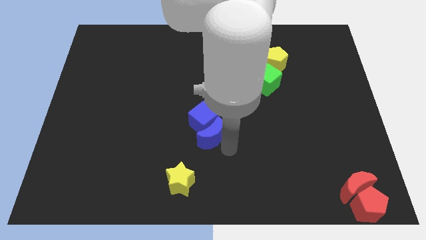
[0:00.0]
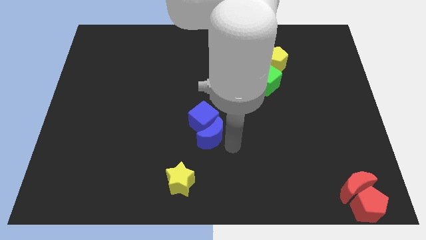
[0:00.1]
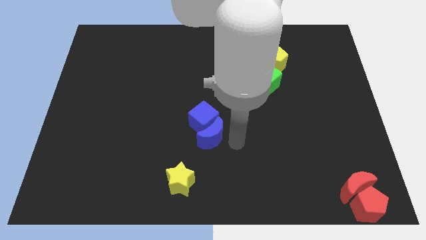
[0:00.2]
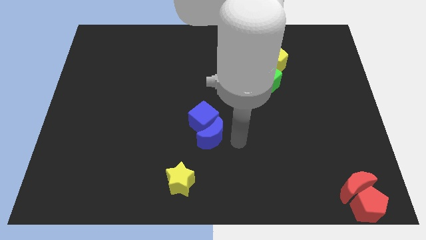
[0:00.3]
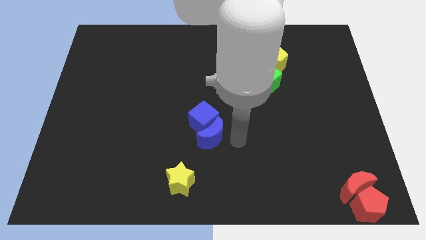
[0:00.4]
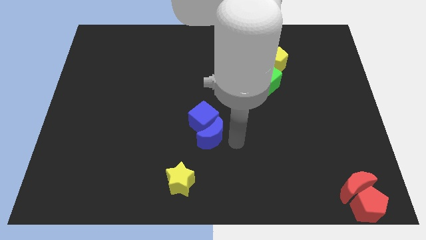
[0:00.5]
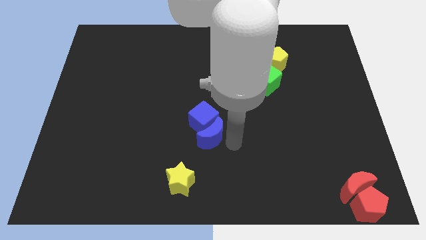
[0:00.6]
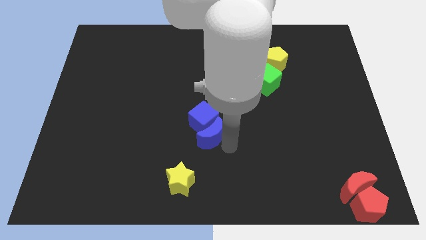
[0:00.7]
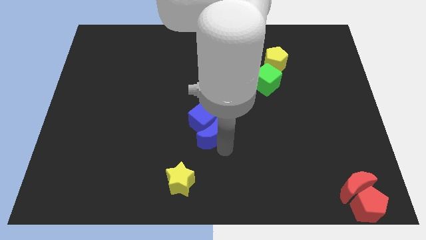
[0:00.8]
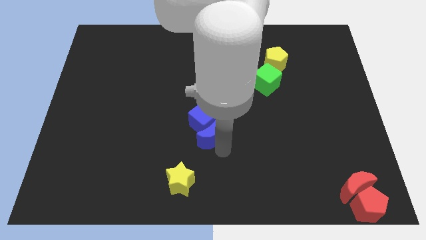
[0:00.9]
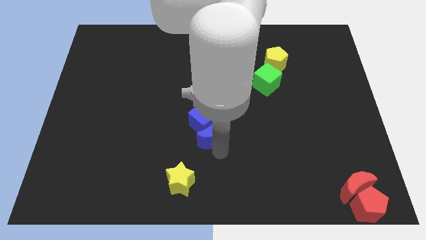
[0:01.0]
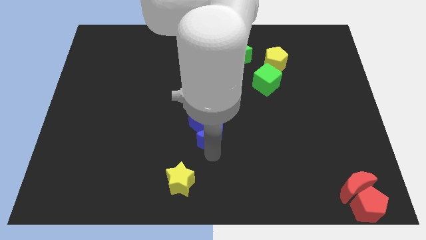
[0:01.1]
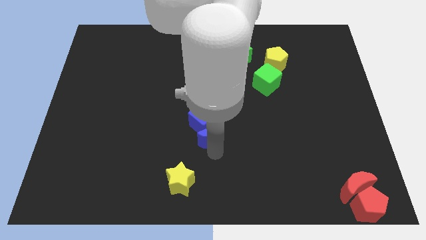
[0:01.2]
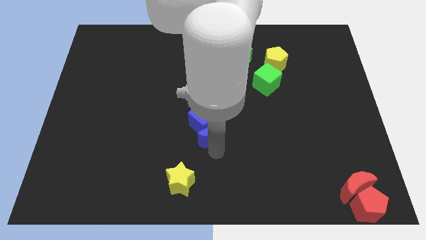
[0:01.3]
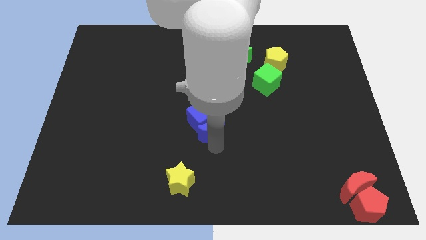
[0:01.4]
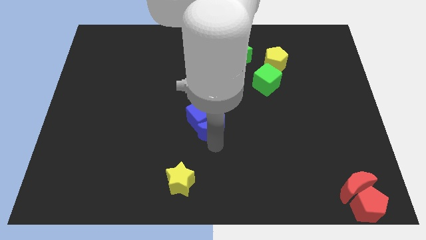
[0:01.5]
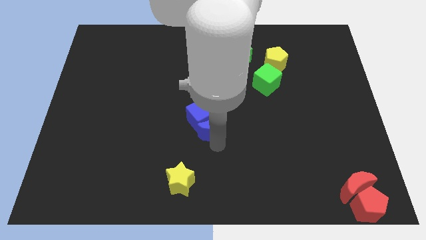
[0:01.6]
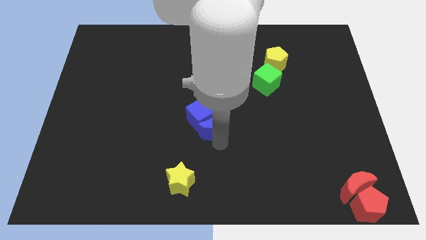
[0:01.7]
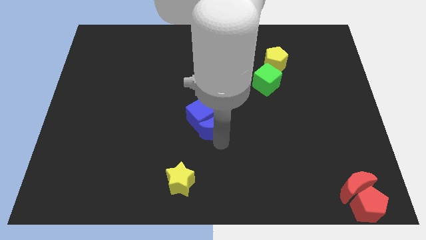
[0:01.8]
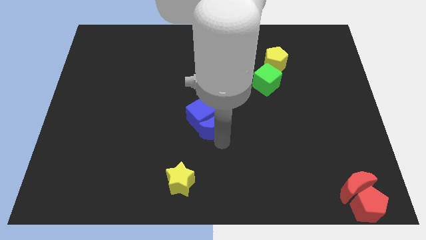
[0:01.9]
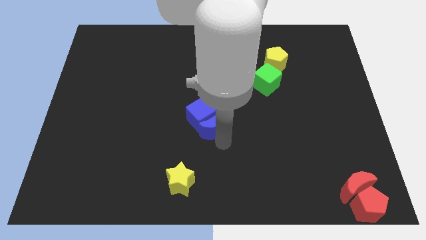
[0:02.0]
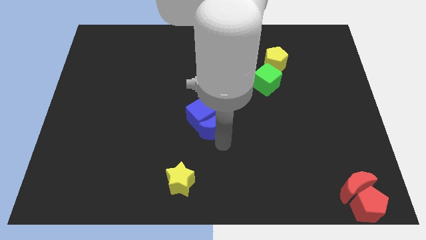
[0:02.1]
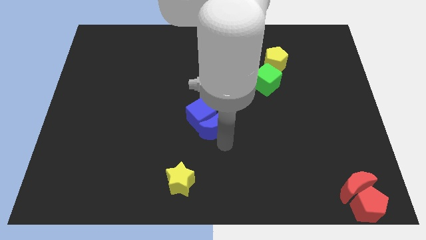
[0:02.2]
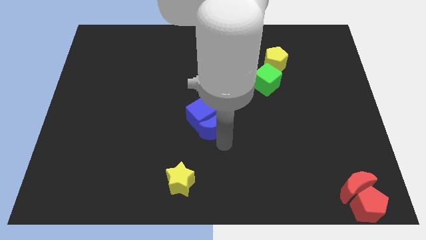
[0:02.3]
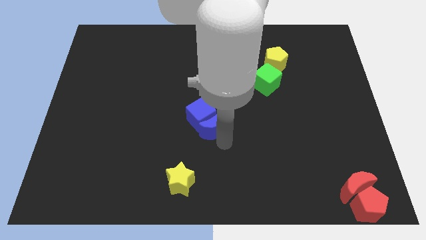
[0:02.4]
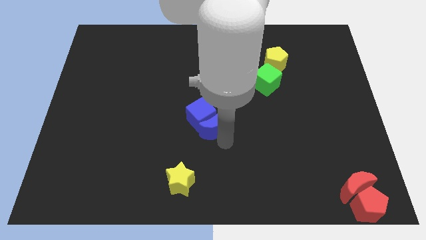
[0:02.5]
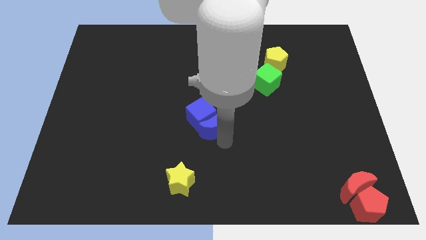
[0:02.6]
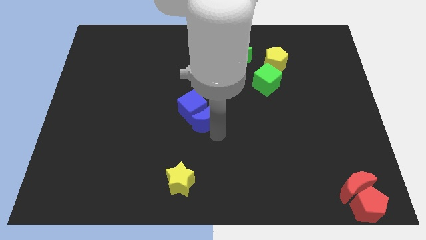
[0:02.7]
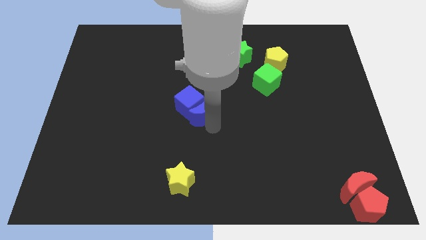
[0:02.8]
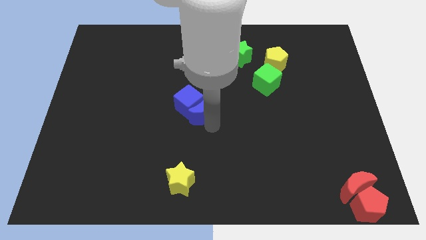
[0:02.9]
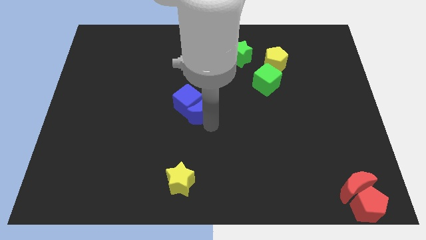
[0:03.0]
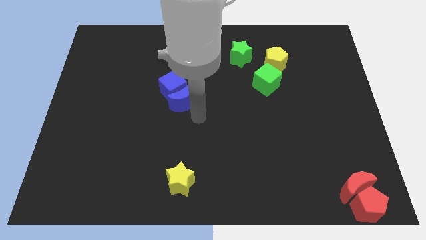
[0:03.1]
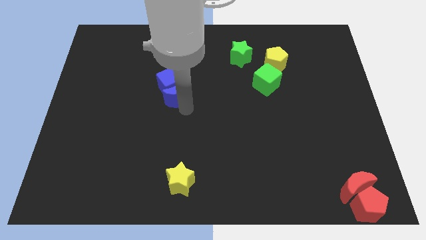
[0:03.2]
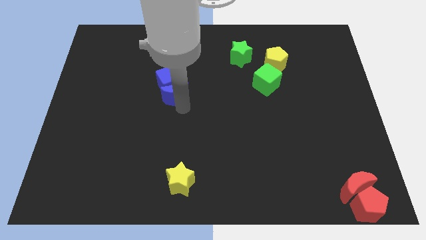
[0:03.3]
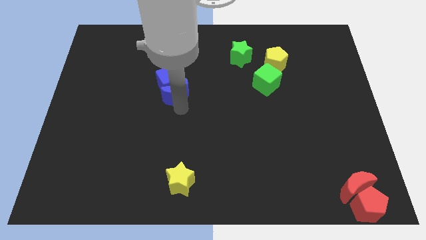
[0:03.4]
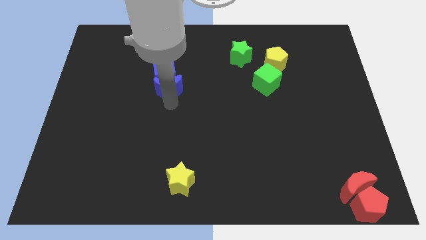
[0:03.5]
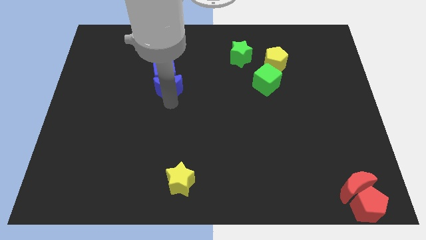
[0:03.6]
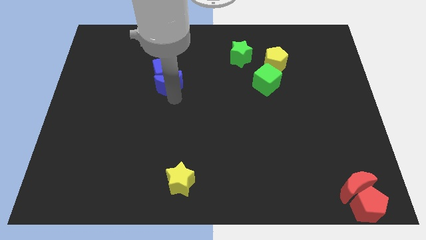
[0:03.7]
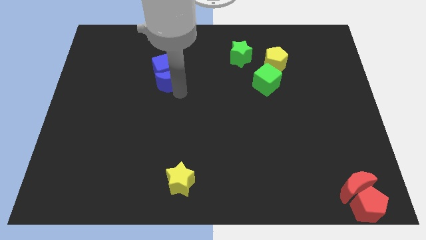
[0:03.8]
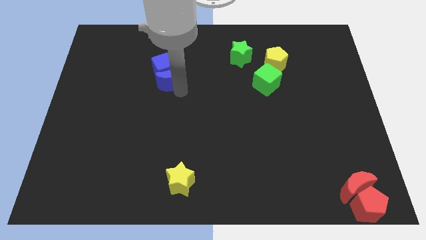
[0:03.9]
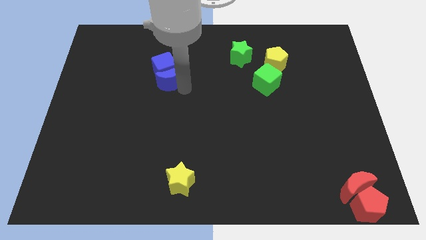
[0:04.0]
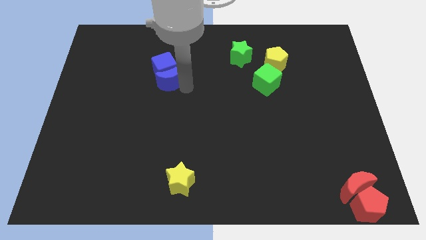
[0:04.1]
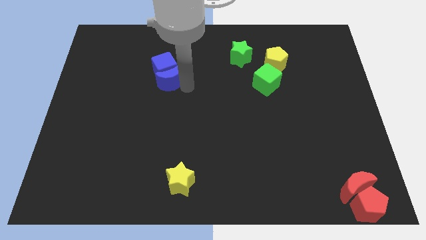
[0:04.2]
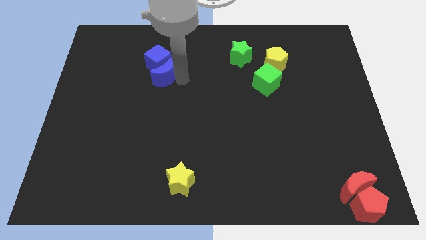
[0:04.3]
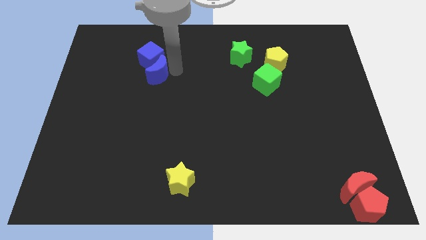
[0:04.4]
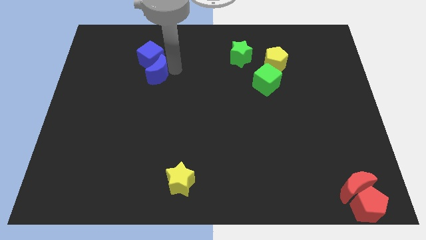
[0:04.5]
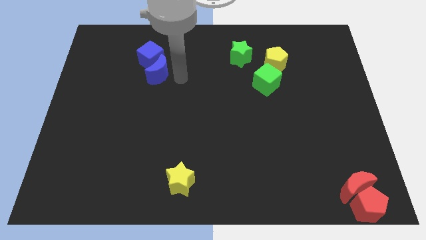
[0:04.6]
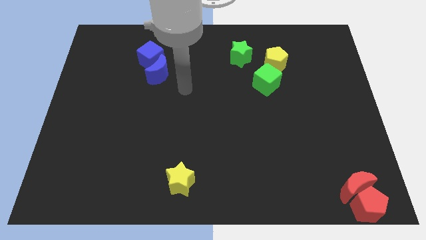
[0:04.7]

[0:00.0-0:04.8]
slide the blue blocks towards the top left

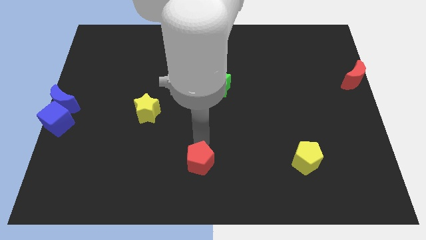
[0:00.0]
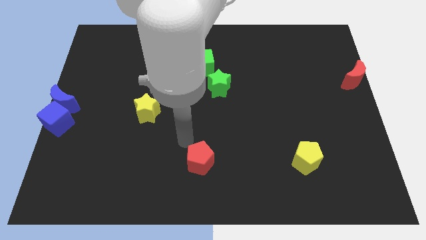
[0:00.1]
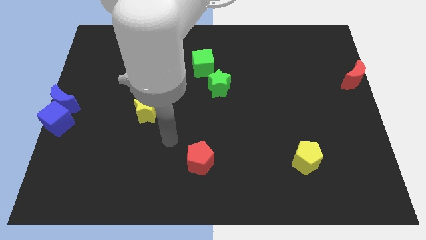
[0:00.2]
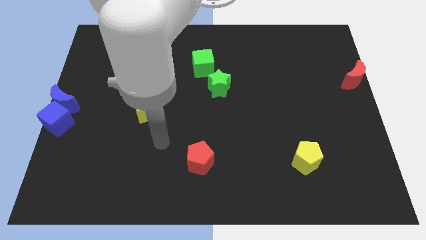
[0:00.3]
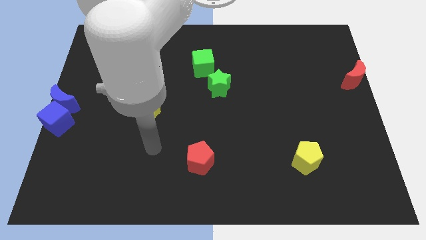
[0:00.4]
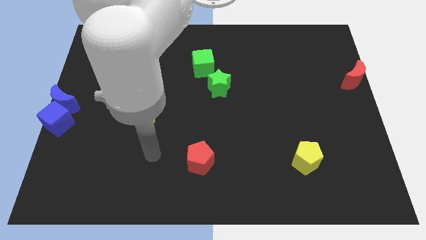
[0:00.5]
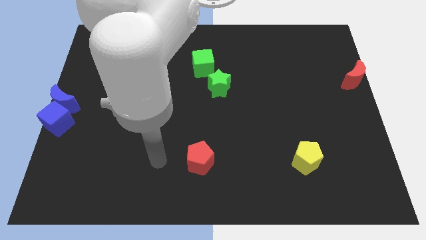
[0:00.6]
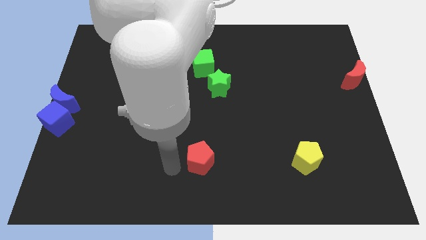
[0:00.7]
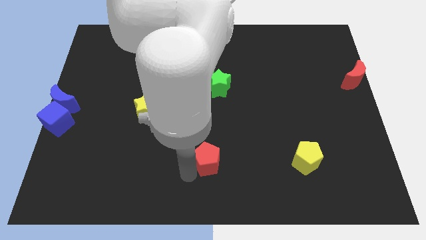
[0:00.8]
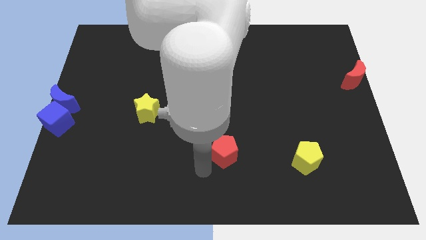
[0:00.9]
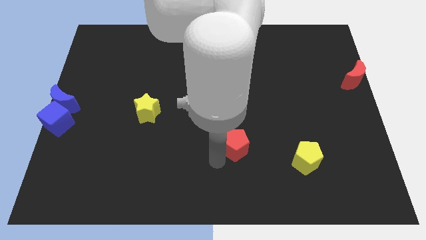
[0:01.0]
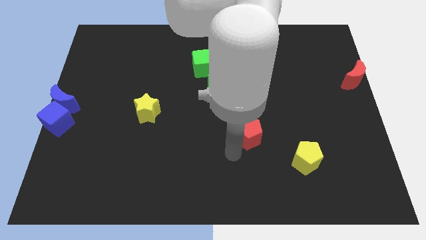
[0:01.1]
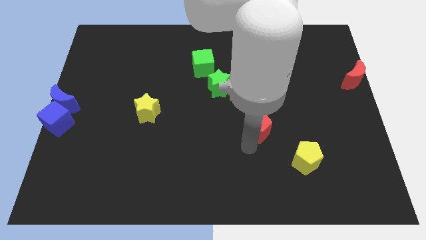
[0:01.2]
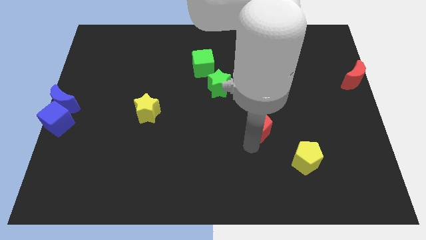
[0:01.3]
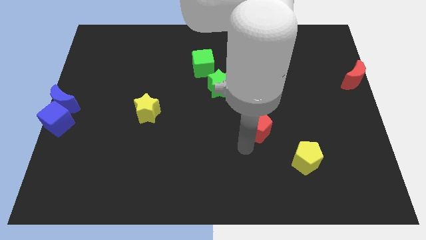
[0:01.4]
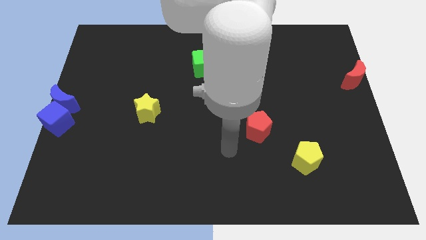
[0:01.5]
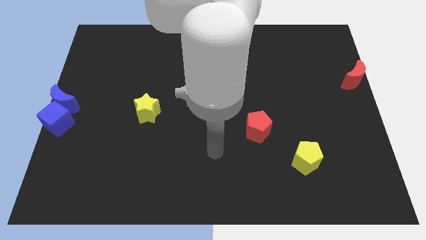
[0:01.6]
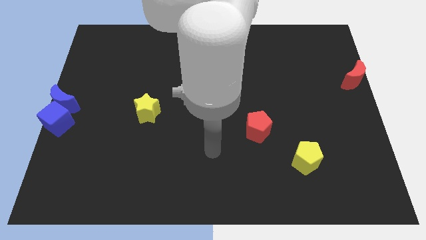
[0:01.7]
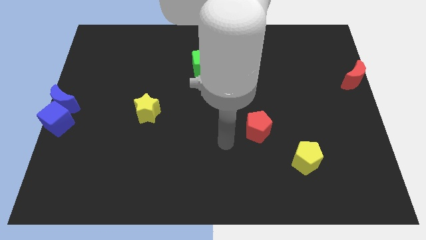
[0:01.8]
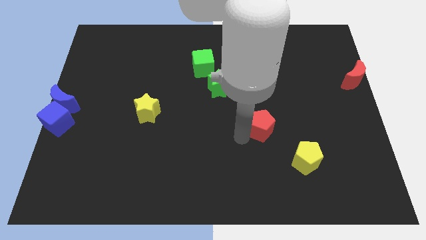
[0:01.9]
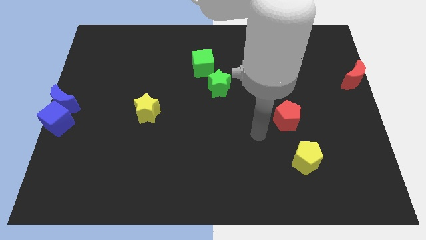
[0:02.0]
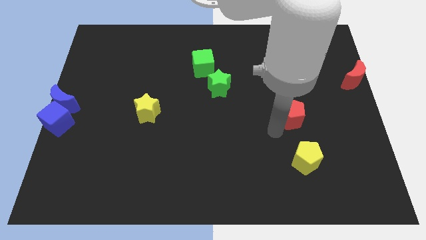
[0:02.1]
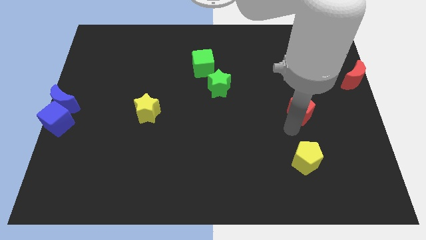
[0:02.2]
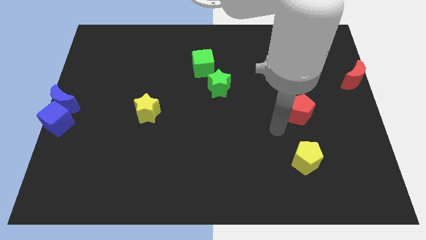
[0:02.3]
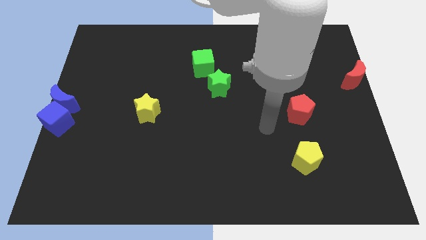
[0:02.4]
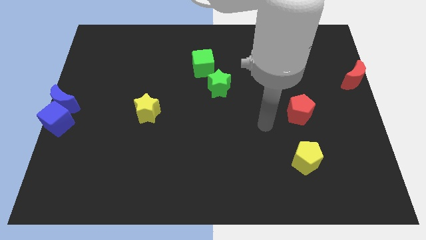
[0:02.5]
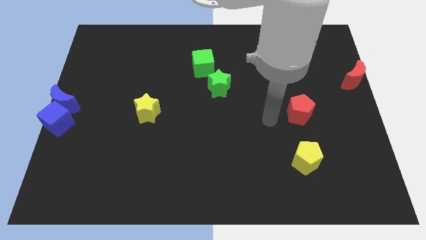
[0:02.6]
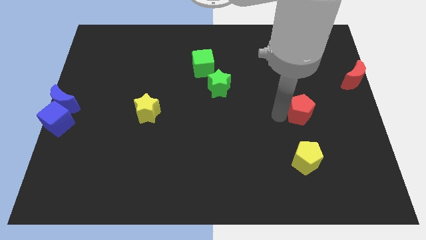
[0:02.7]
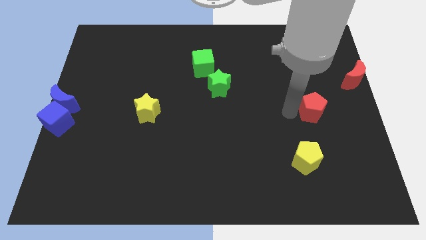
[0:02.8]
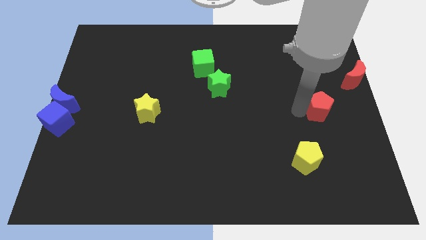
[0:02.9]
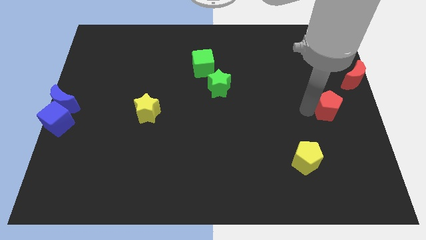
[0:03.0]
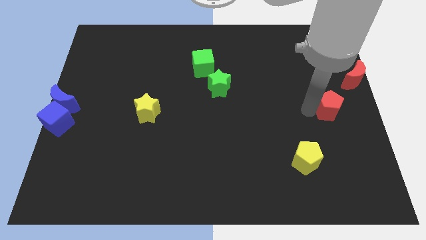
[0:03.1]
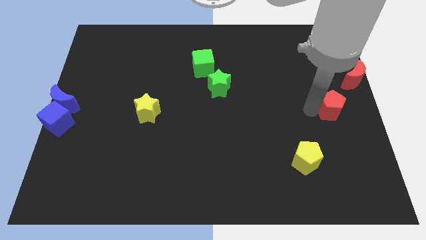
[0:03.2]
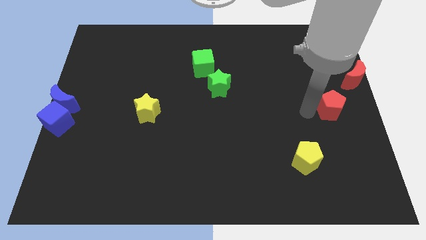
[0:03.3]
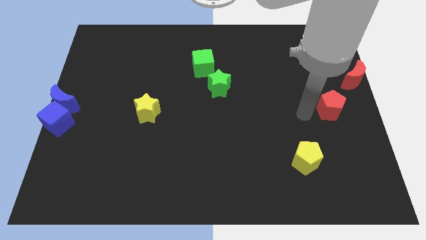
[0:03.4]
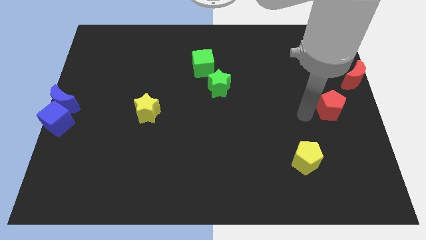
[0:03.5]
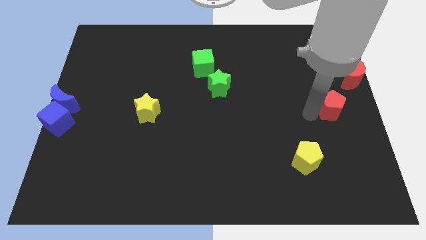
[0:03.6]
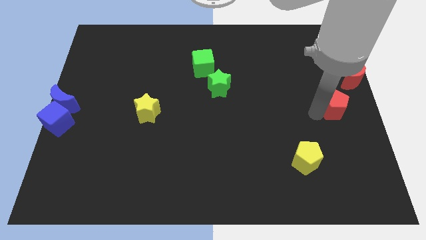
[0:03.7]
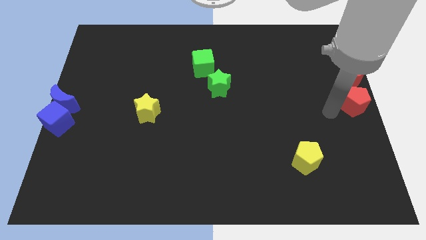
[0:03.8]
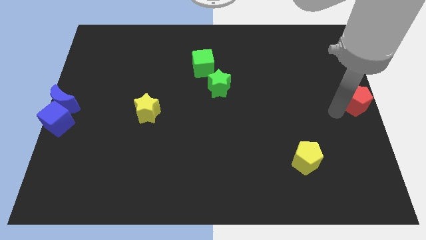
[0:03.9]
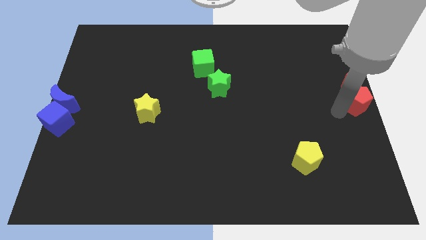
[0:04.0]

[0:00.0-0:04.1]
slide the red pentagon to the center right corner of the board

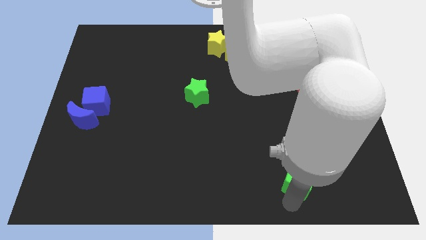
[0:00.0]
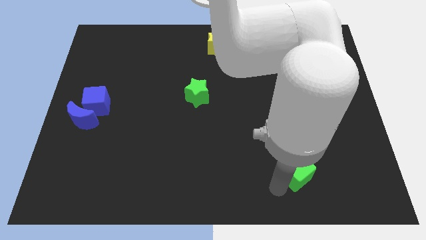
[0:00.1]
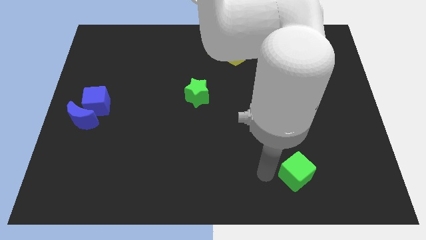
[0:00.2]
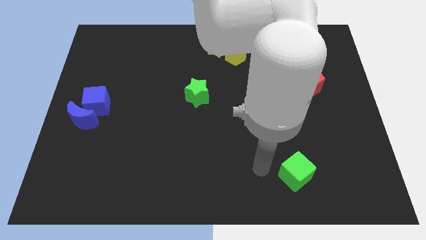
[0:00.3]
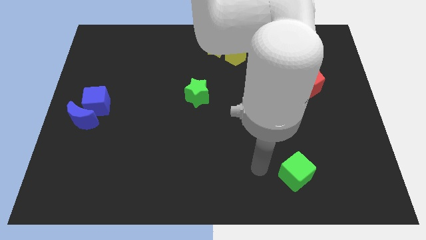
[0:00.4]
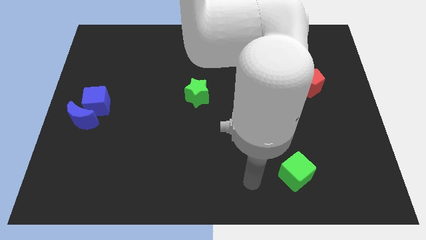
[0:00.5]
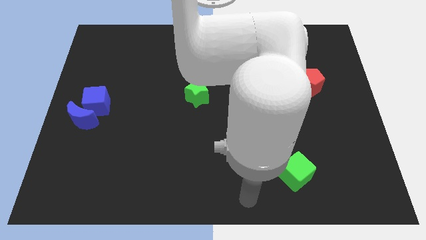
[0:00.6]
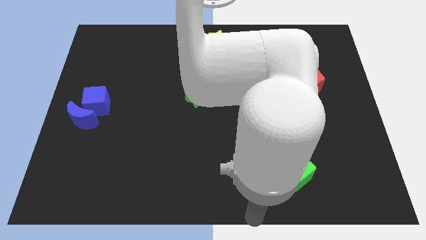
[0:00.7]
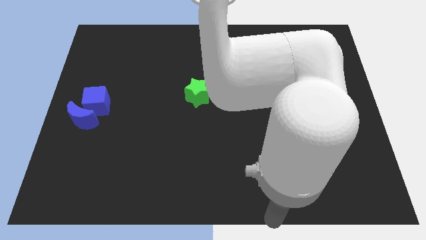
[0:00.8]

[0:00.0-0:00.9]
place the arm close to the bottom right center of the board
